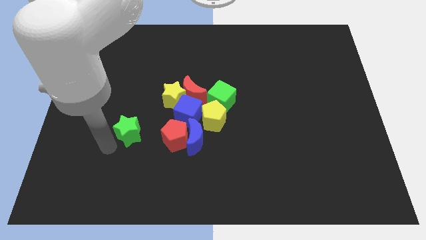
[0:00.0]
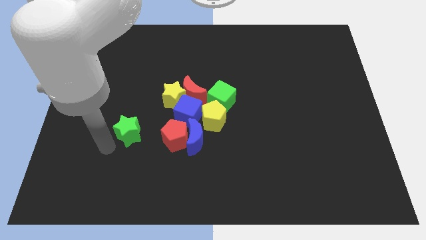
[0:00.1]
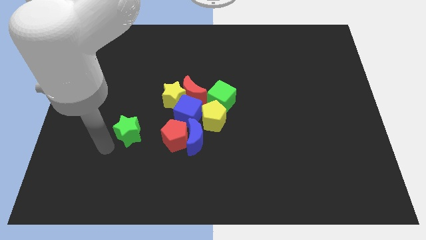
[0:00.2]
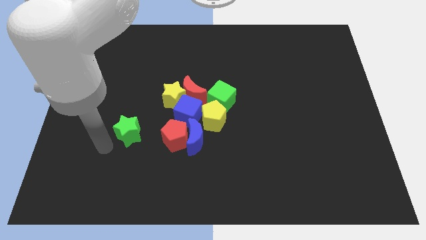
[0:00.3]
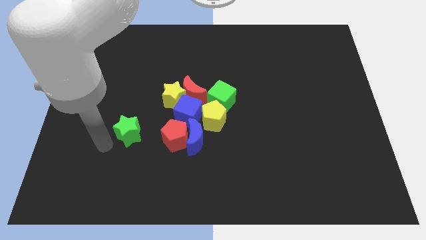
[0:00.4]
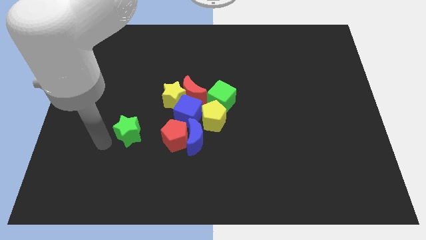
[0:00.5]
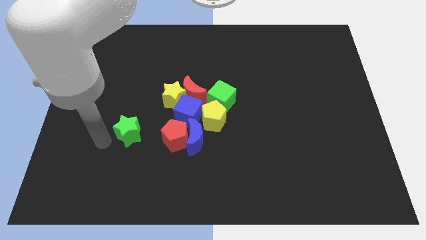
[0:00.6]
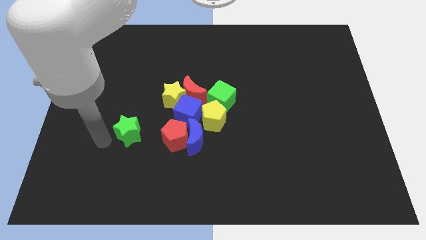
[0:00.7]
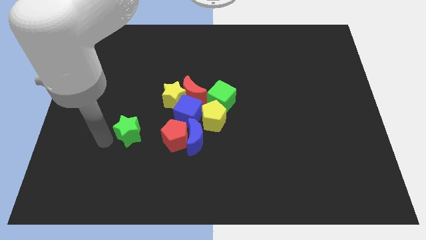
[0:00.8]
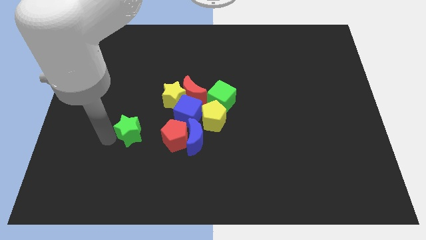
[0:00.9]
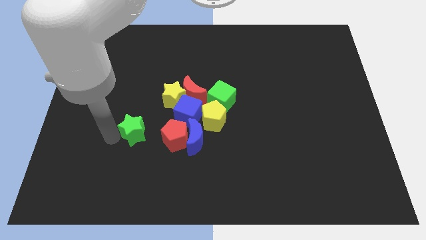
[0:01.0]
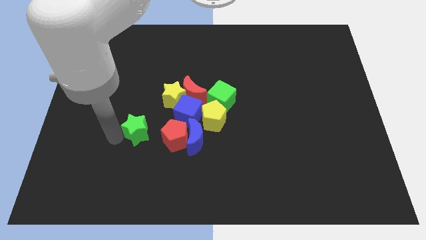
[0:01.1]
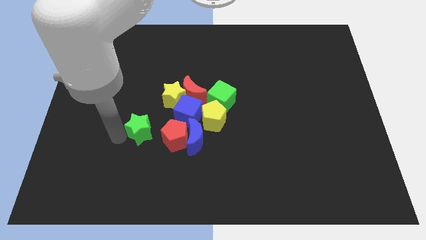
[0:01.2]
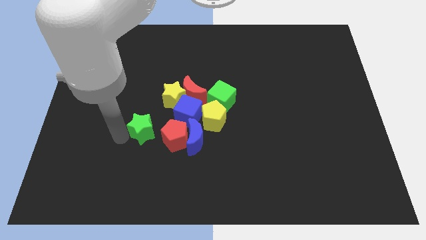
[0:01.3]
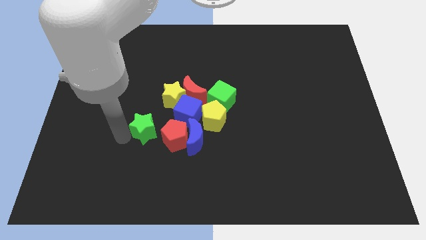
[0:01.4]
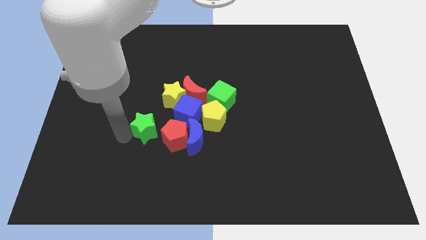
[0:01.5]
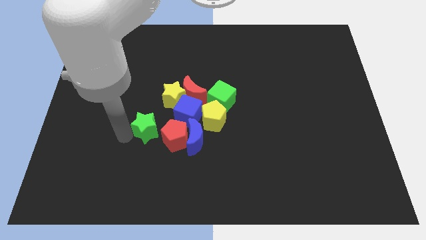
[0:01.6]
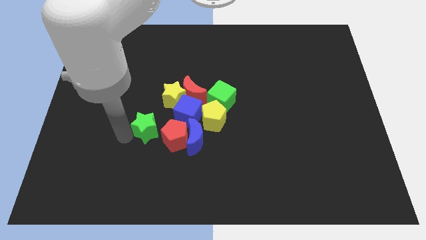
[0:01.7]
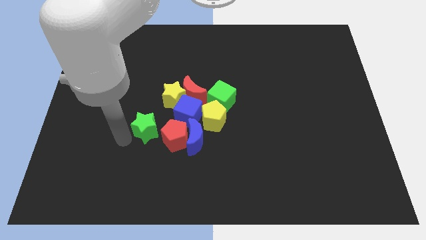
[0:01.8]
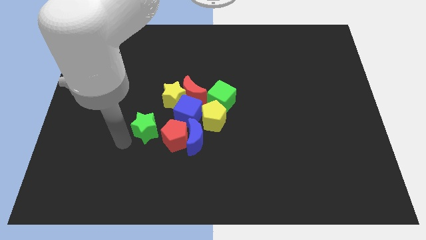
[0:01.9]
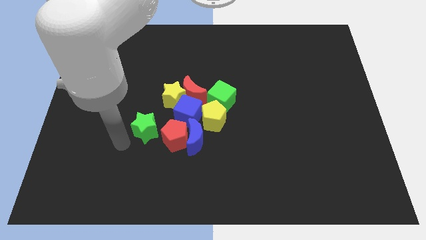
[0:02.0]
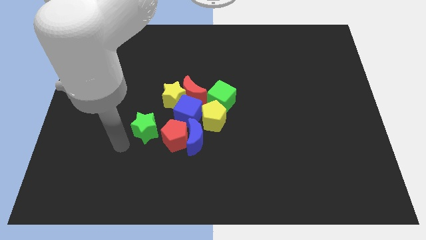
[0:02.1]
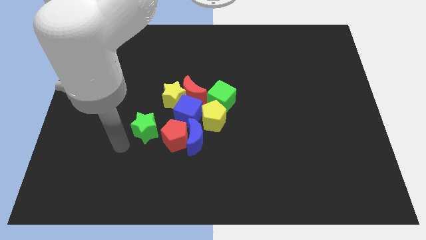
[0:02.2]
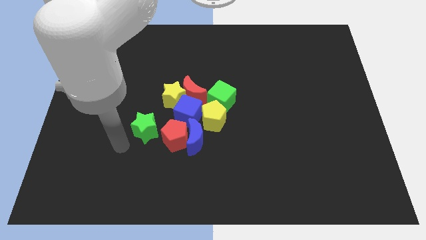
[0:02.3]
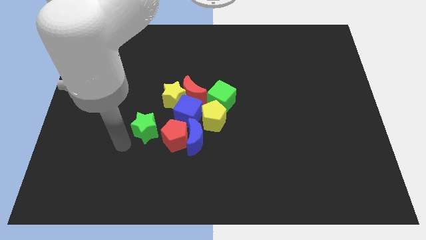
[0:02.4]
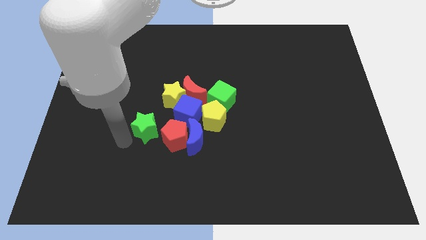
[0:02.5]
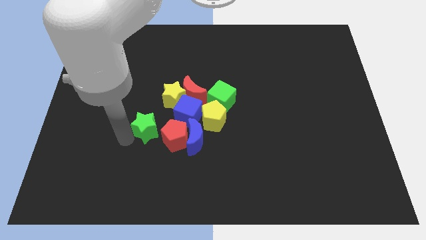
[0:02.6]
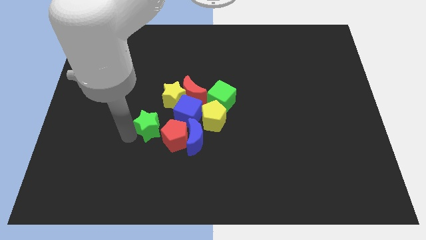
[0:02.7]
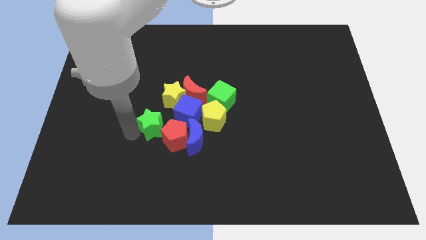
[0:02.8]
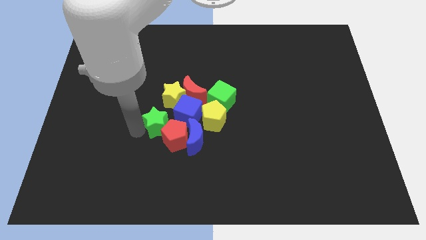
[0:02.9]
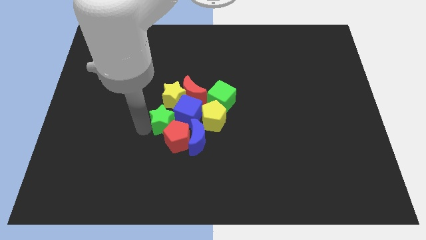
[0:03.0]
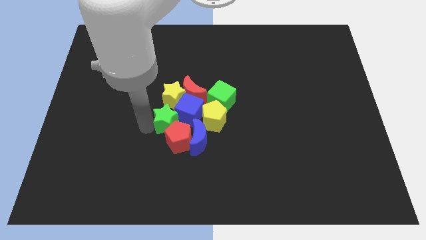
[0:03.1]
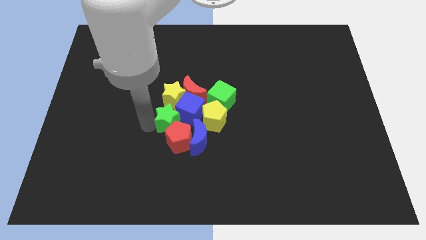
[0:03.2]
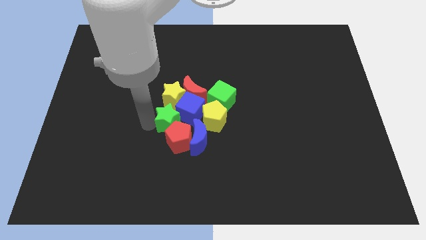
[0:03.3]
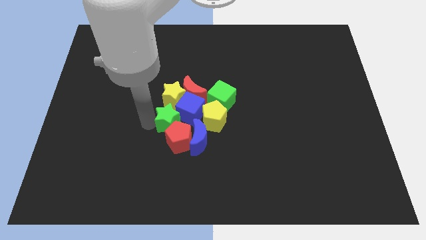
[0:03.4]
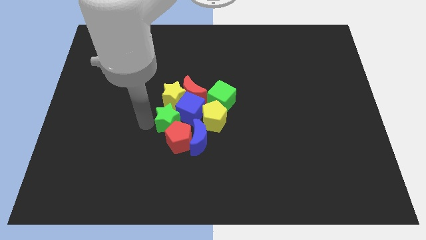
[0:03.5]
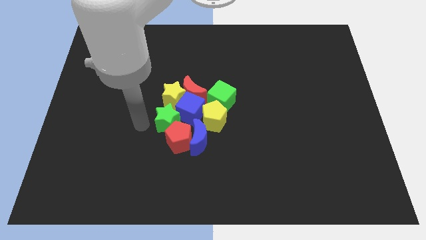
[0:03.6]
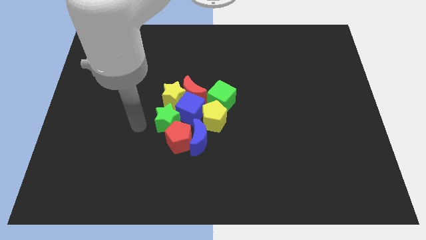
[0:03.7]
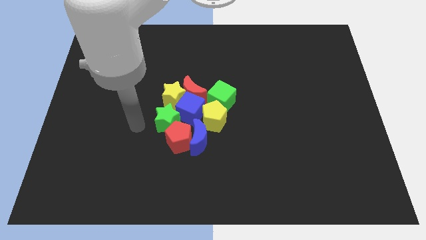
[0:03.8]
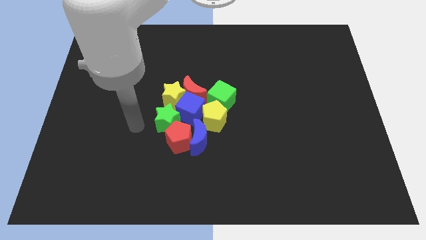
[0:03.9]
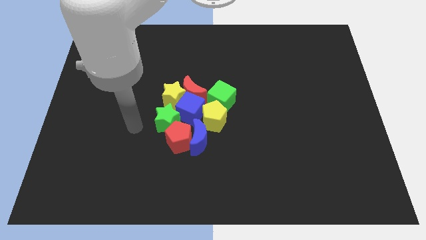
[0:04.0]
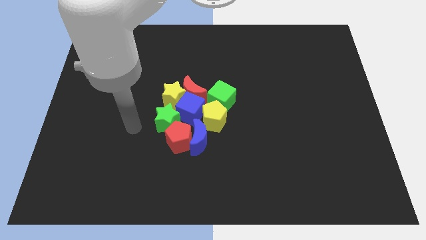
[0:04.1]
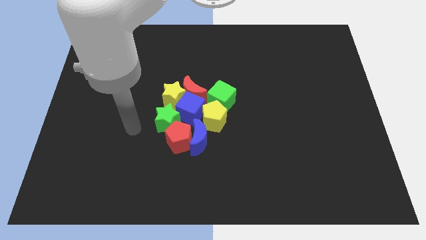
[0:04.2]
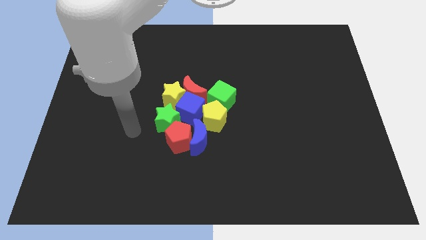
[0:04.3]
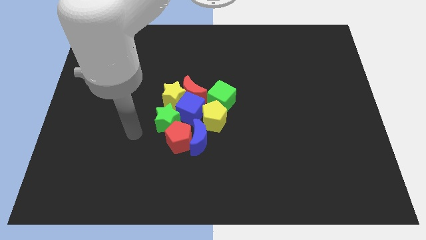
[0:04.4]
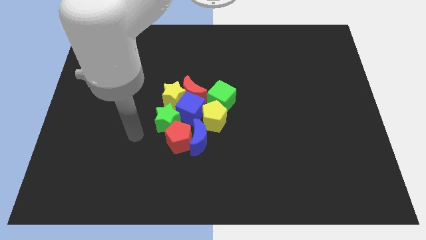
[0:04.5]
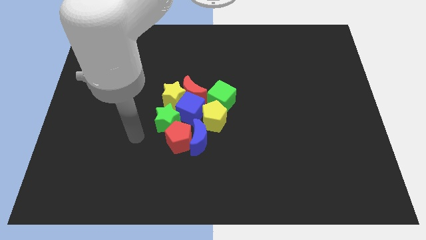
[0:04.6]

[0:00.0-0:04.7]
push green star into the group of blocks

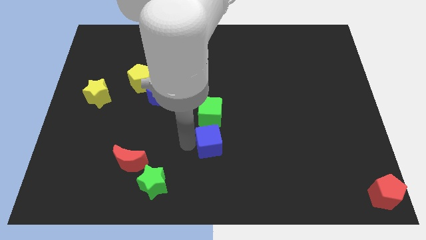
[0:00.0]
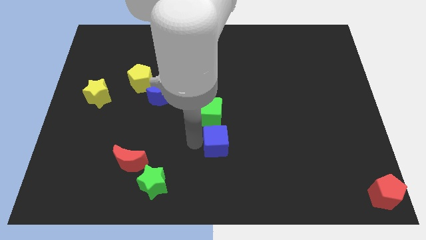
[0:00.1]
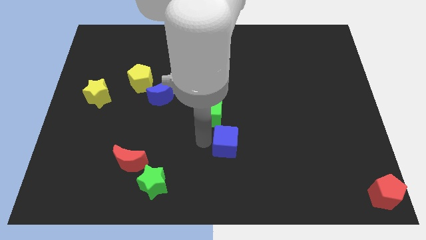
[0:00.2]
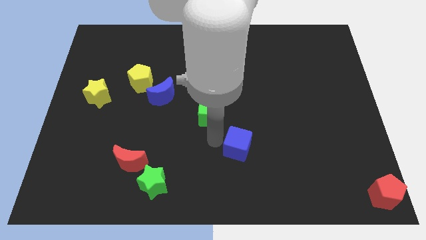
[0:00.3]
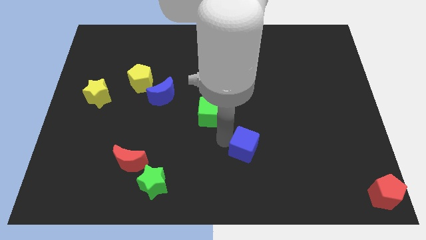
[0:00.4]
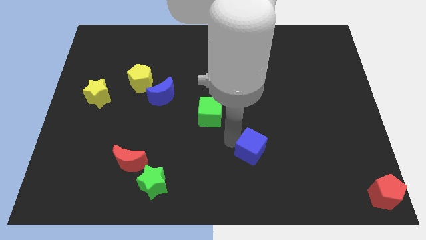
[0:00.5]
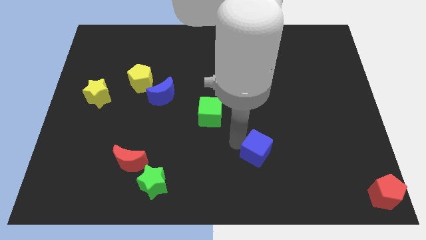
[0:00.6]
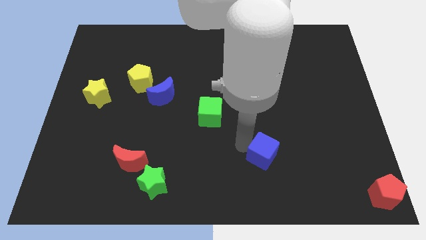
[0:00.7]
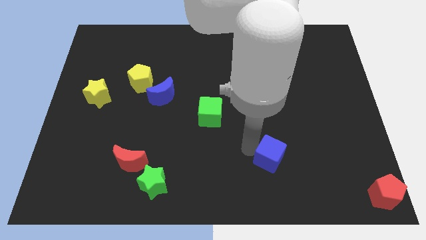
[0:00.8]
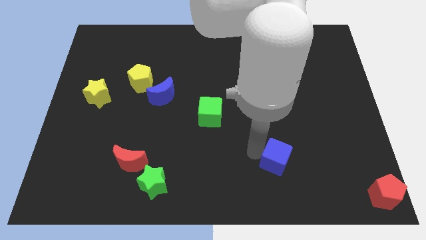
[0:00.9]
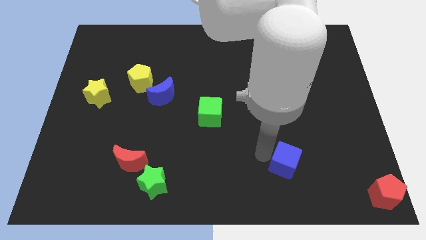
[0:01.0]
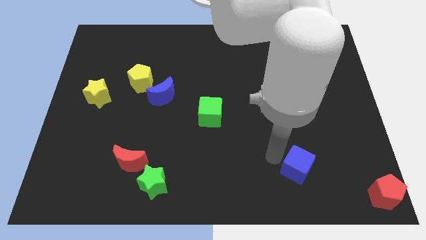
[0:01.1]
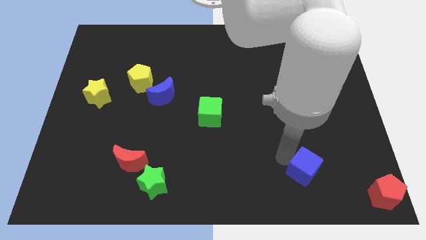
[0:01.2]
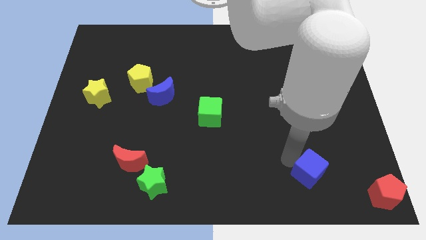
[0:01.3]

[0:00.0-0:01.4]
push the blue cube towards the red pentagon

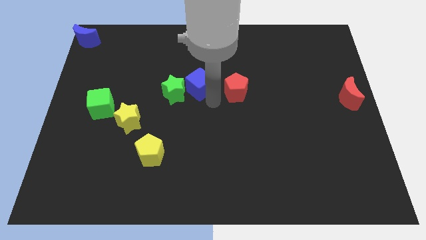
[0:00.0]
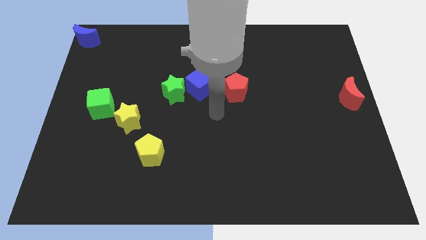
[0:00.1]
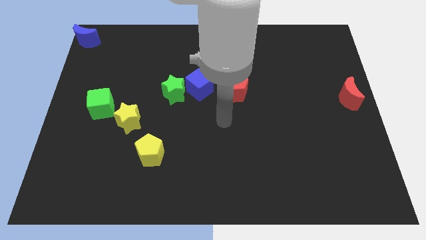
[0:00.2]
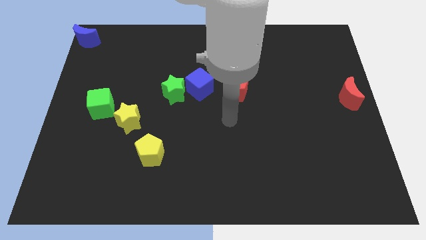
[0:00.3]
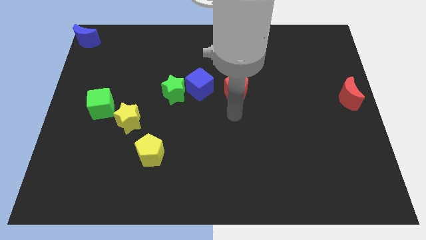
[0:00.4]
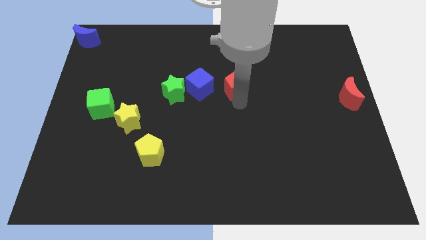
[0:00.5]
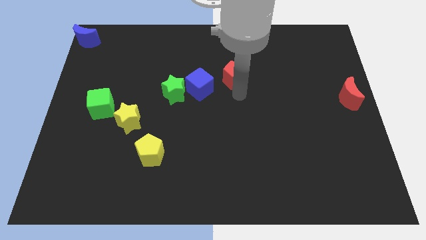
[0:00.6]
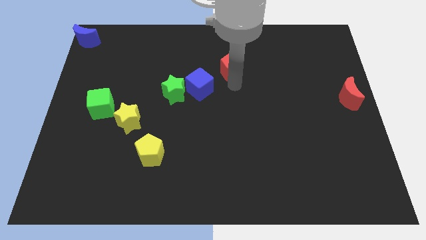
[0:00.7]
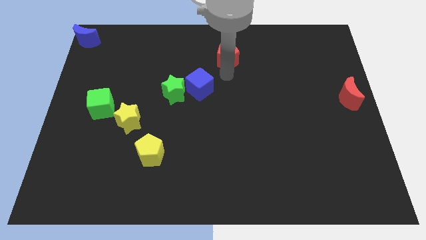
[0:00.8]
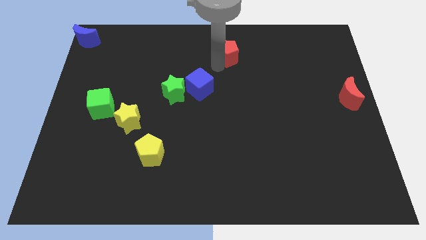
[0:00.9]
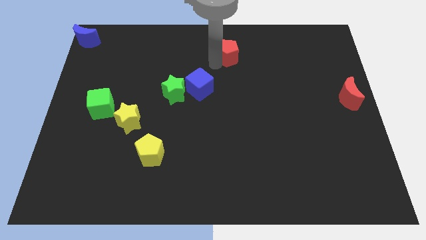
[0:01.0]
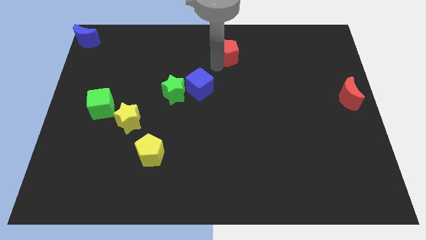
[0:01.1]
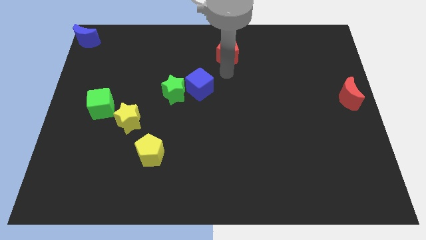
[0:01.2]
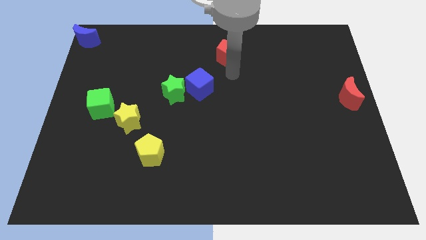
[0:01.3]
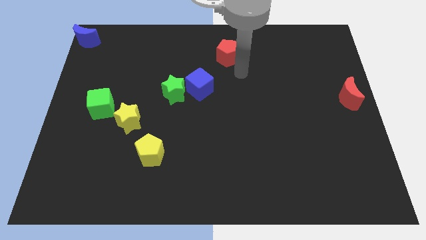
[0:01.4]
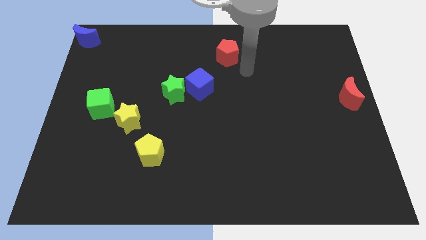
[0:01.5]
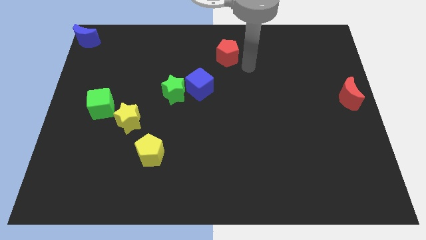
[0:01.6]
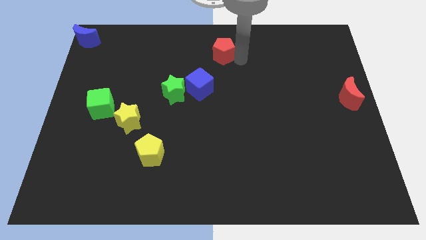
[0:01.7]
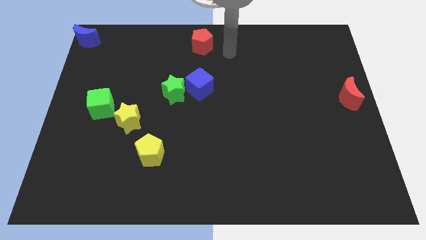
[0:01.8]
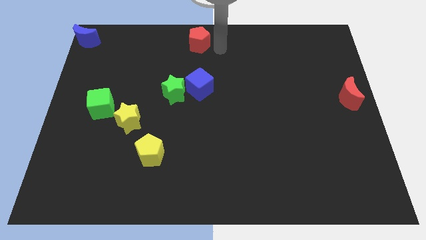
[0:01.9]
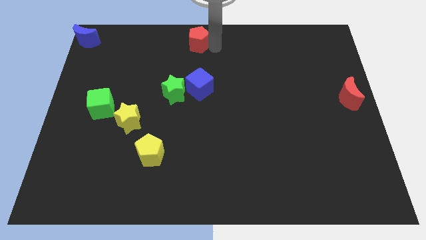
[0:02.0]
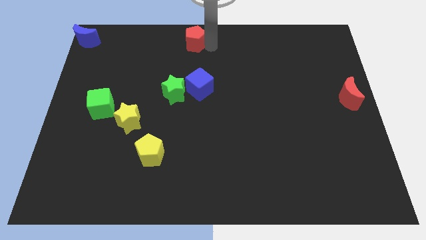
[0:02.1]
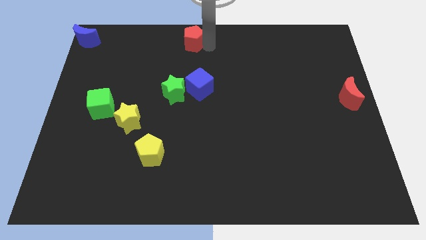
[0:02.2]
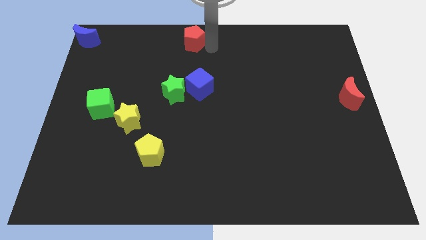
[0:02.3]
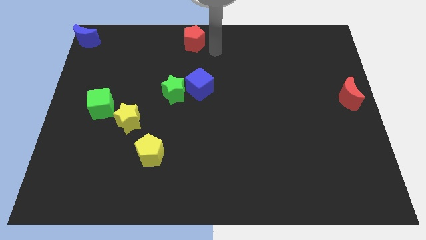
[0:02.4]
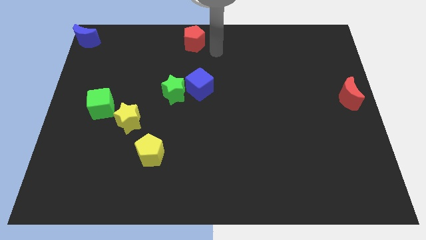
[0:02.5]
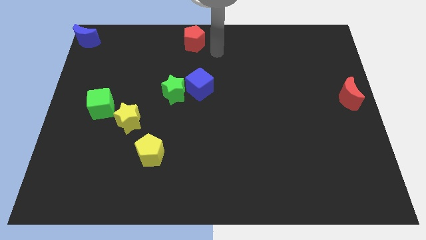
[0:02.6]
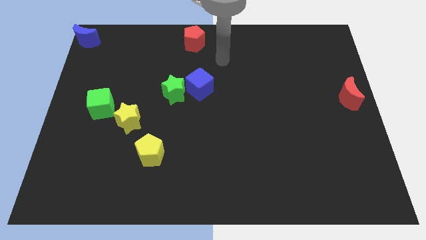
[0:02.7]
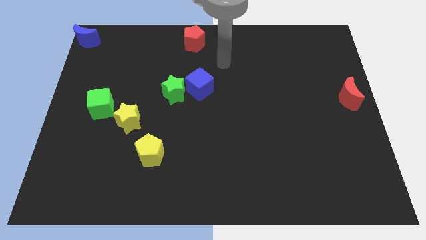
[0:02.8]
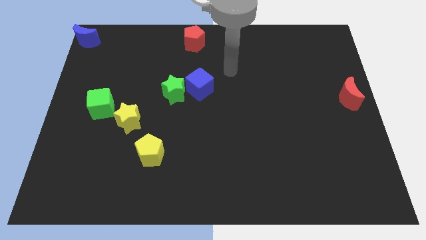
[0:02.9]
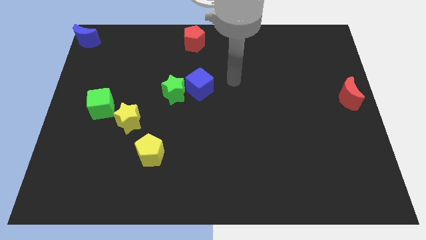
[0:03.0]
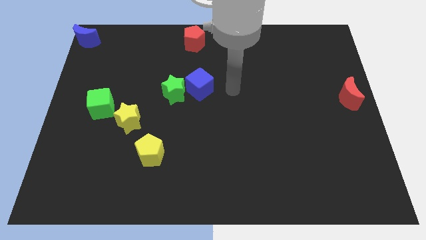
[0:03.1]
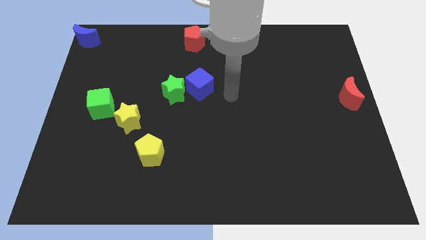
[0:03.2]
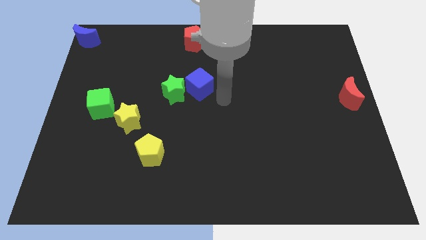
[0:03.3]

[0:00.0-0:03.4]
push the red pentagon to the top center of the board
